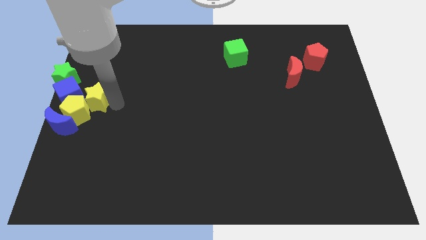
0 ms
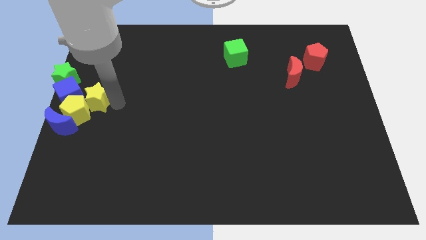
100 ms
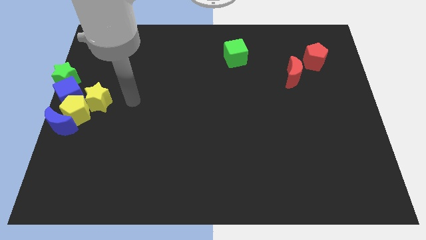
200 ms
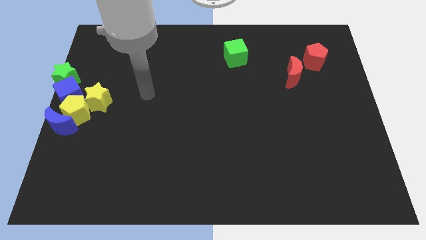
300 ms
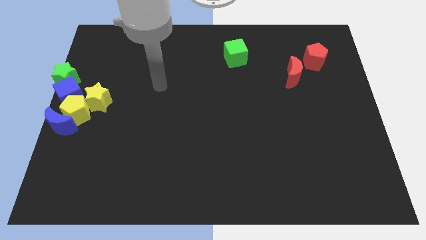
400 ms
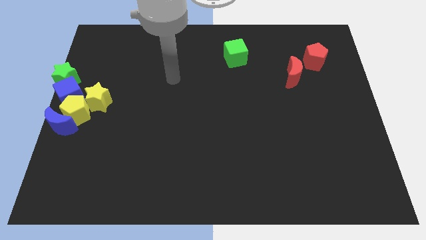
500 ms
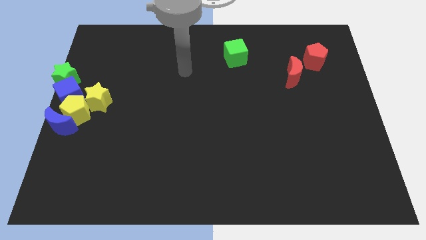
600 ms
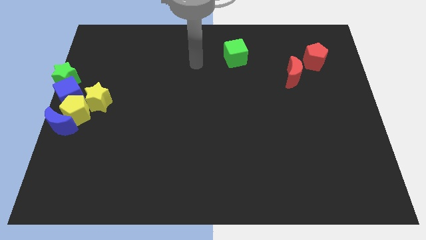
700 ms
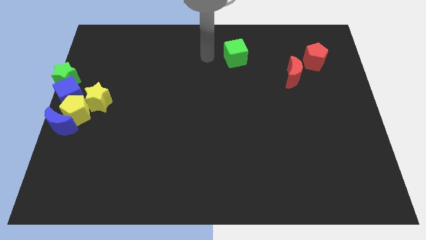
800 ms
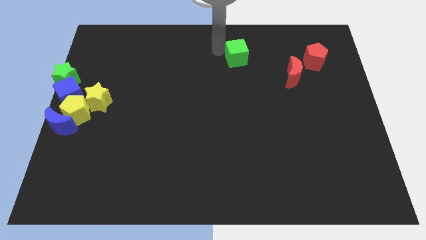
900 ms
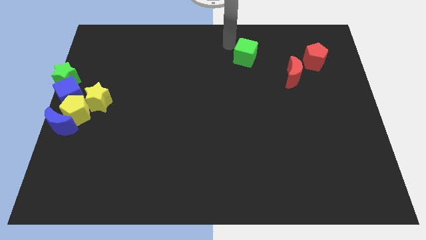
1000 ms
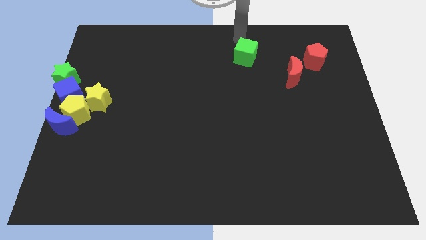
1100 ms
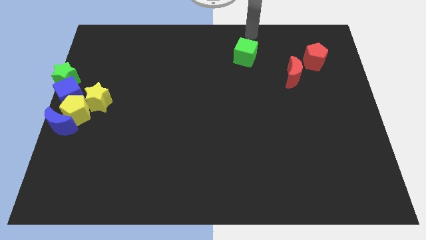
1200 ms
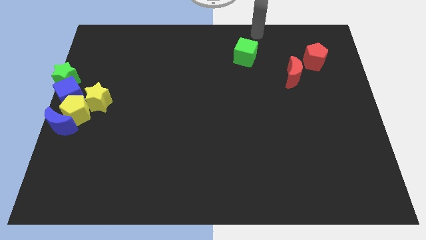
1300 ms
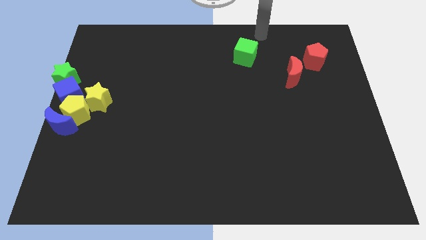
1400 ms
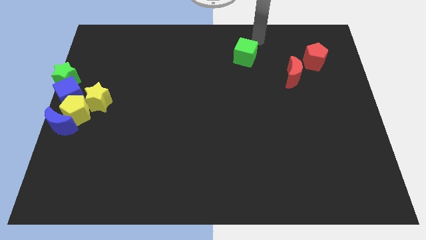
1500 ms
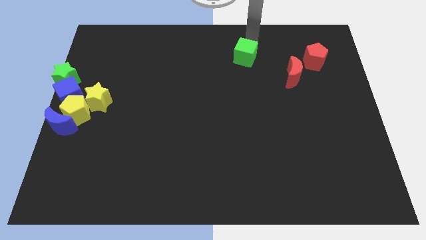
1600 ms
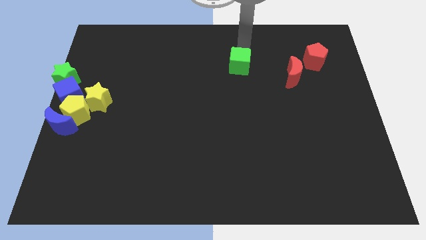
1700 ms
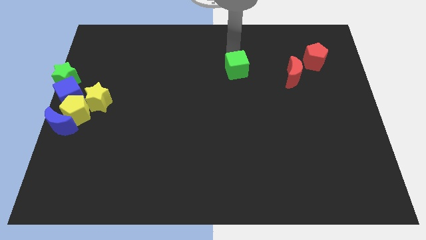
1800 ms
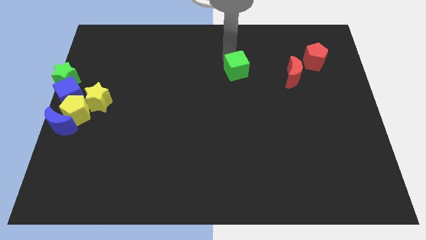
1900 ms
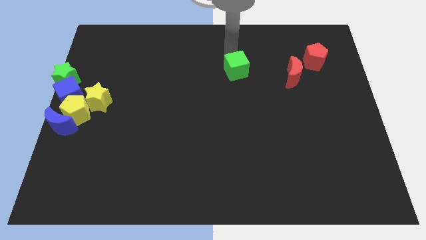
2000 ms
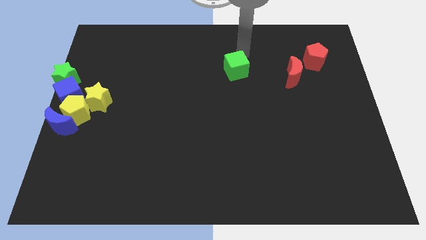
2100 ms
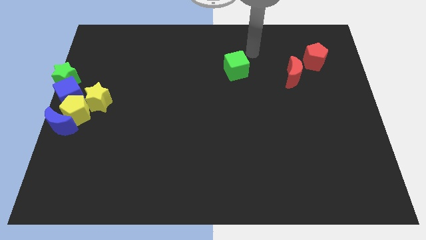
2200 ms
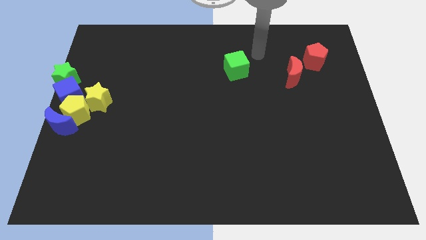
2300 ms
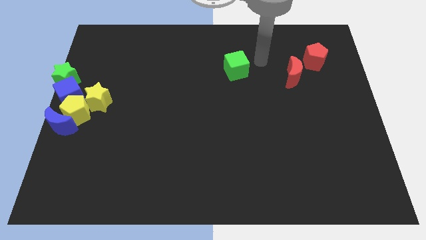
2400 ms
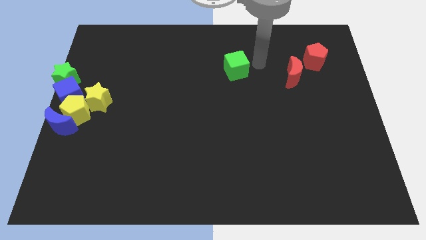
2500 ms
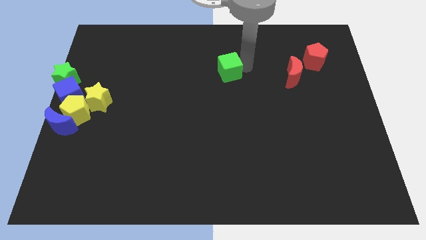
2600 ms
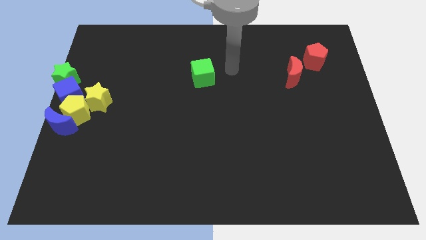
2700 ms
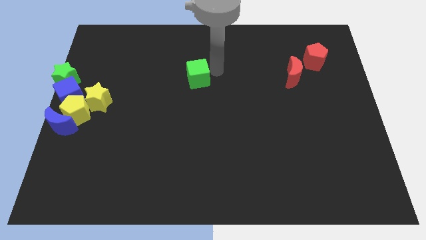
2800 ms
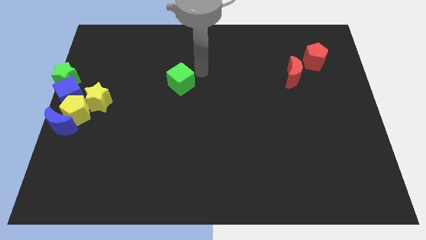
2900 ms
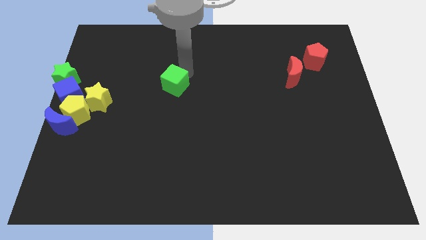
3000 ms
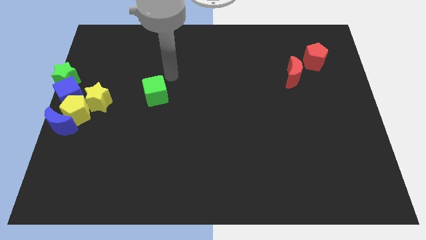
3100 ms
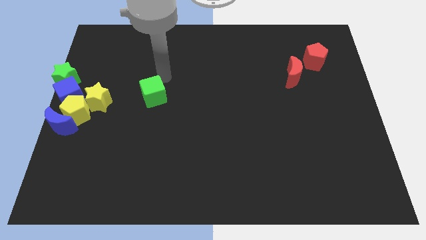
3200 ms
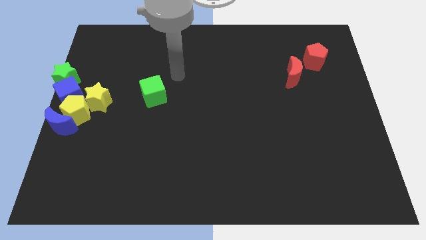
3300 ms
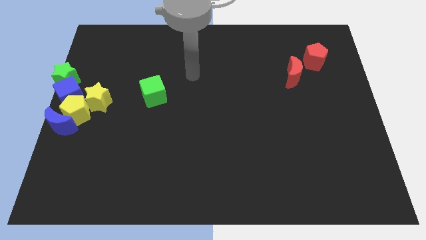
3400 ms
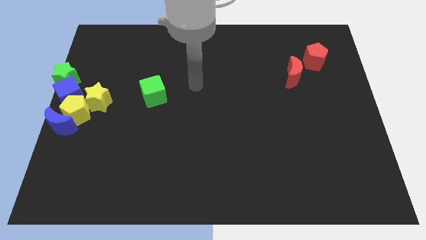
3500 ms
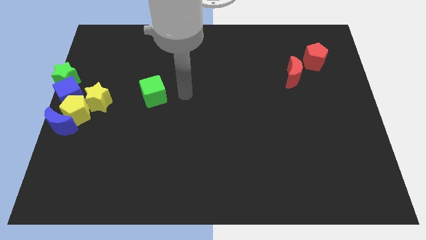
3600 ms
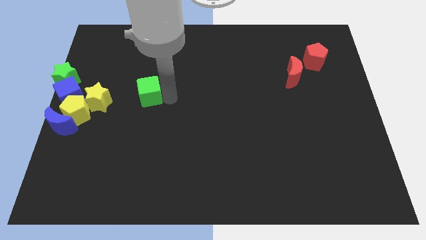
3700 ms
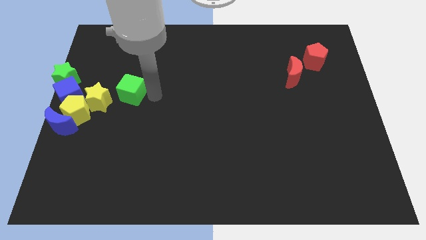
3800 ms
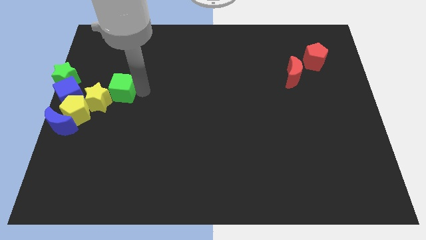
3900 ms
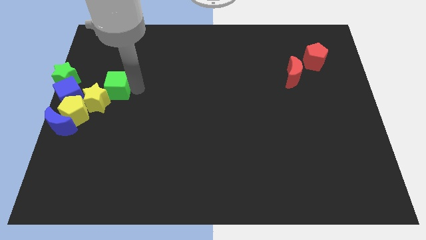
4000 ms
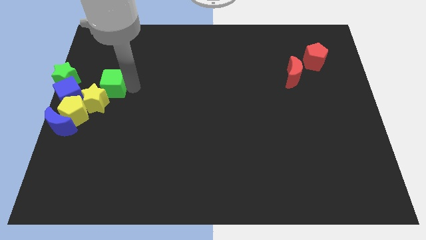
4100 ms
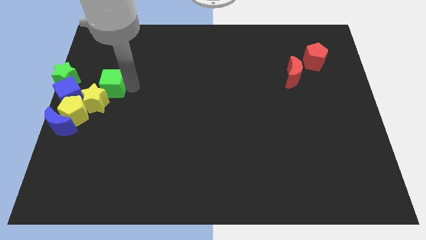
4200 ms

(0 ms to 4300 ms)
move the green cube above yellow star

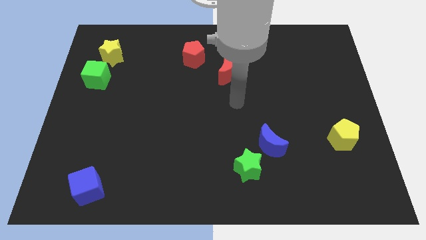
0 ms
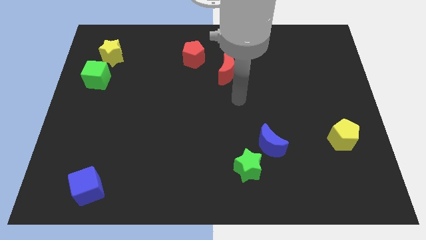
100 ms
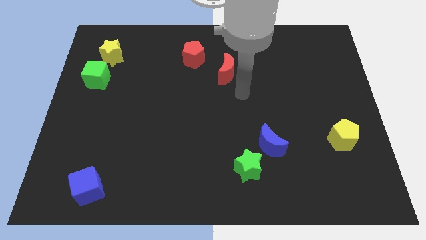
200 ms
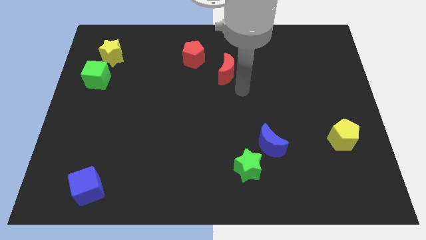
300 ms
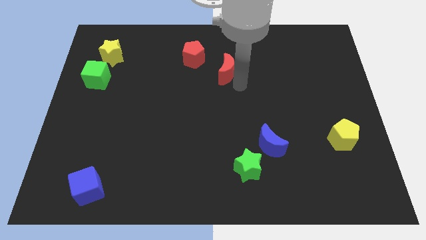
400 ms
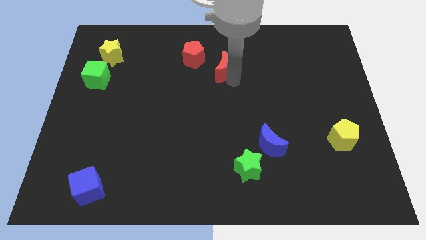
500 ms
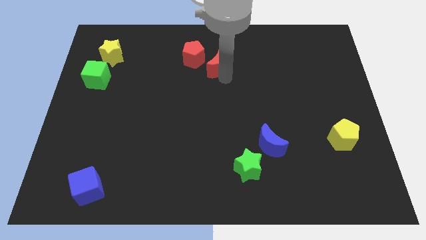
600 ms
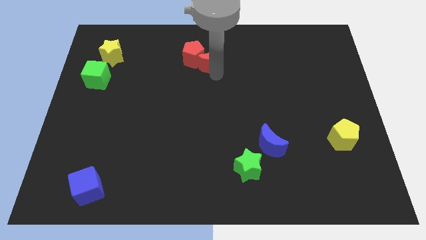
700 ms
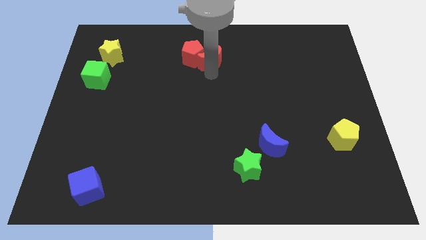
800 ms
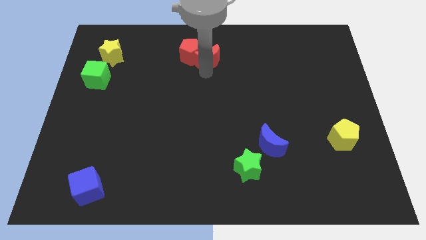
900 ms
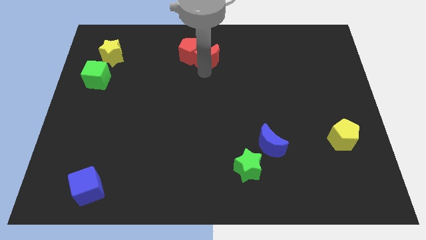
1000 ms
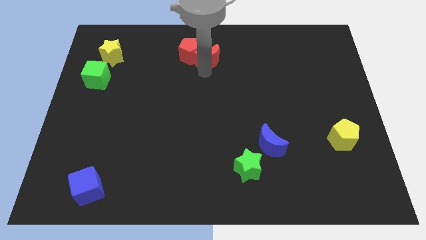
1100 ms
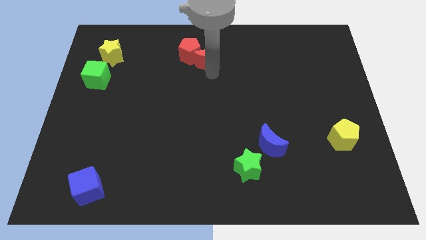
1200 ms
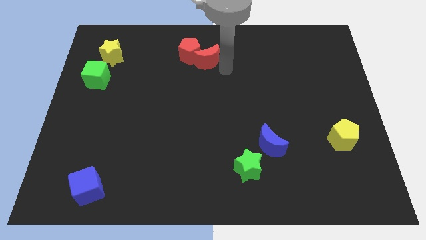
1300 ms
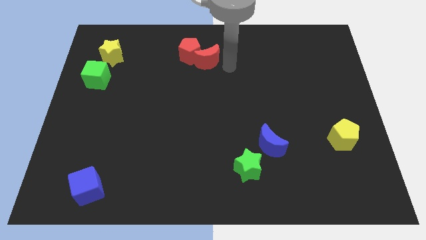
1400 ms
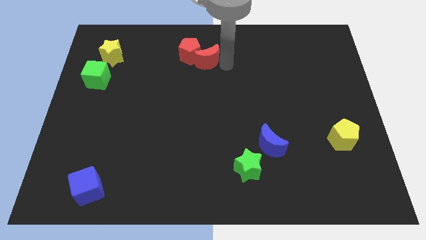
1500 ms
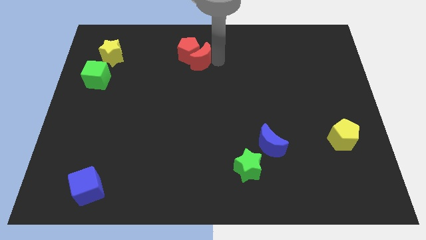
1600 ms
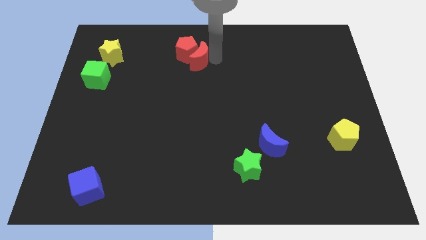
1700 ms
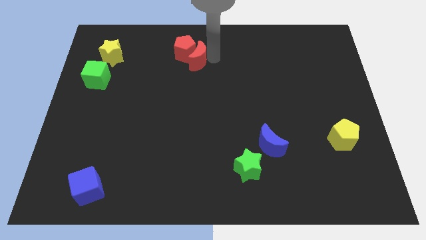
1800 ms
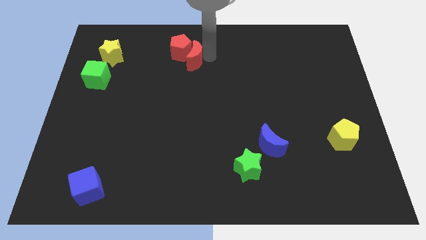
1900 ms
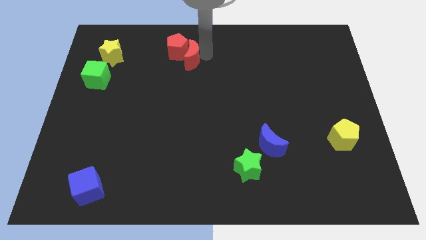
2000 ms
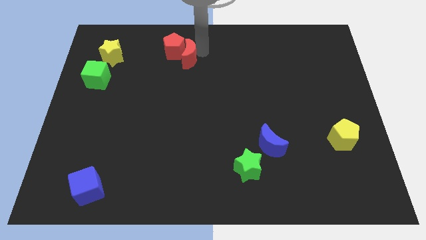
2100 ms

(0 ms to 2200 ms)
push the red crescent into the red pentagon

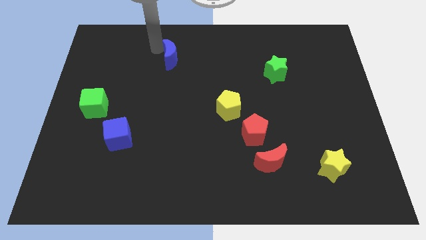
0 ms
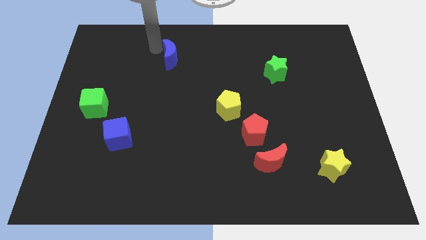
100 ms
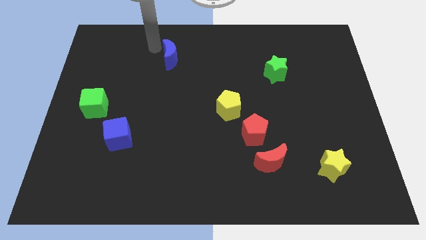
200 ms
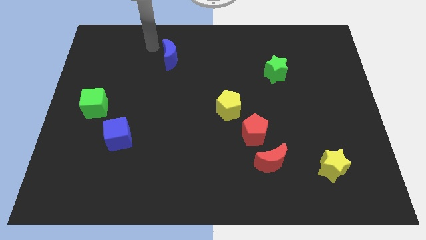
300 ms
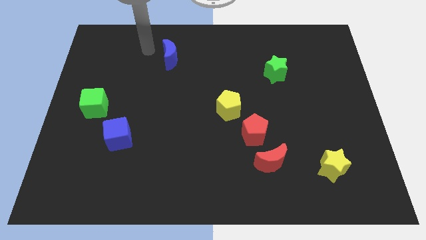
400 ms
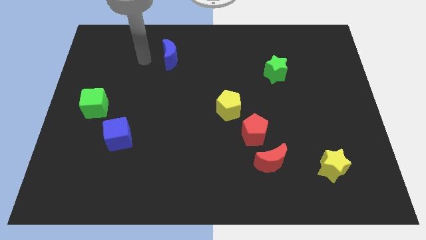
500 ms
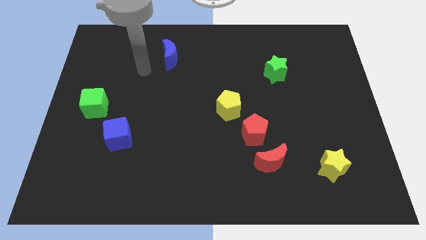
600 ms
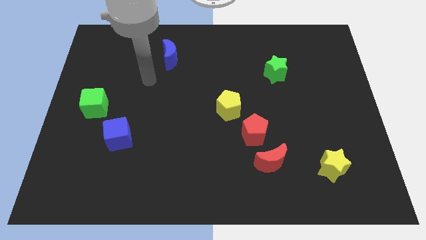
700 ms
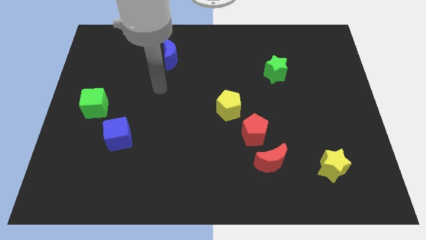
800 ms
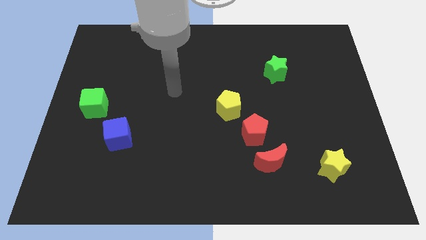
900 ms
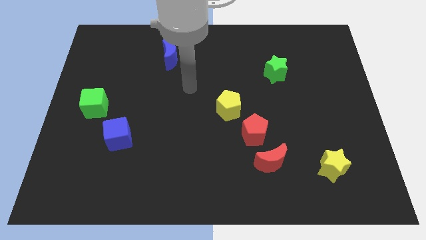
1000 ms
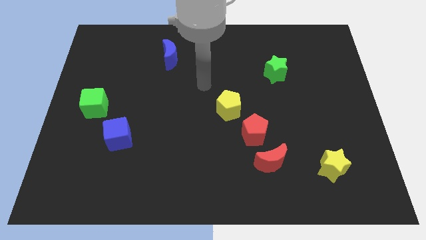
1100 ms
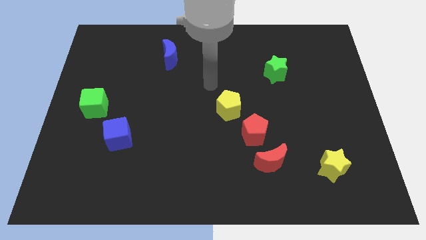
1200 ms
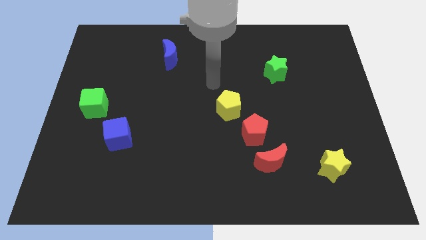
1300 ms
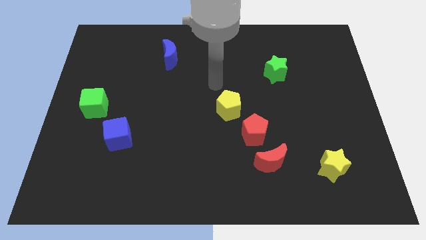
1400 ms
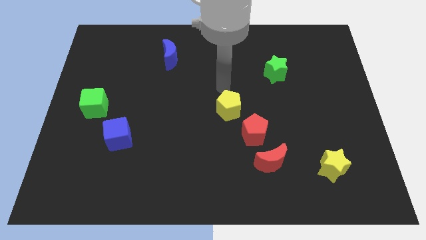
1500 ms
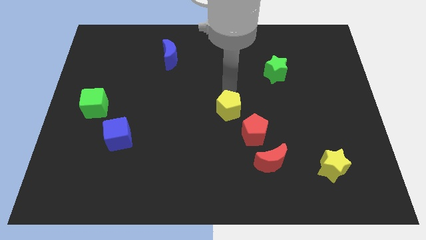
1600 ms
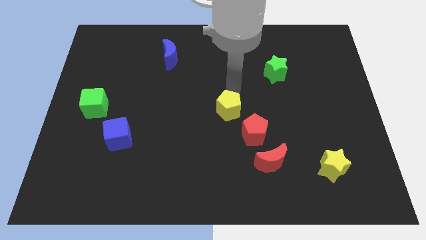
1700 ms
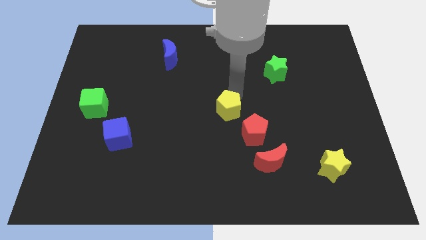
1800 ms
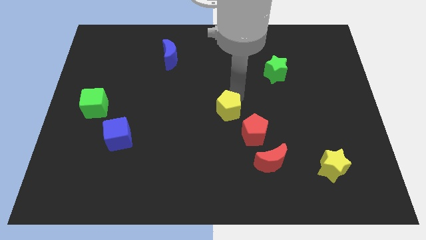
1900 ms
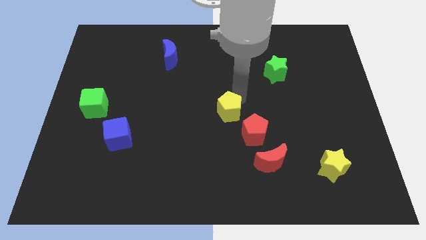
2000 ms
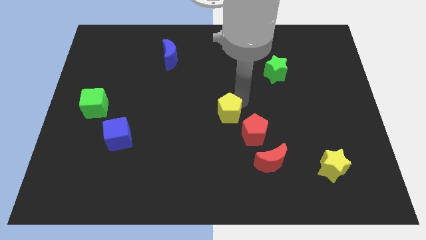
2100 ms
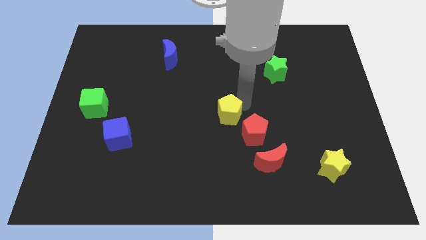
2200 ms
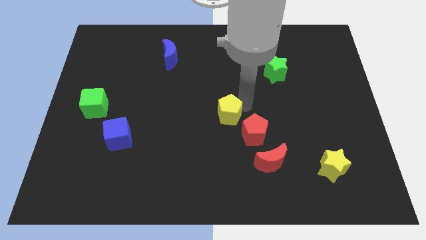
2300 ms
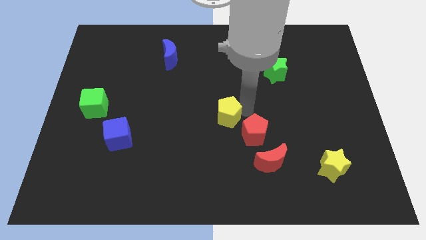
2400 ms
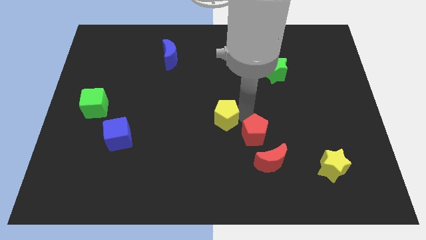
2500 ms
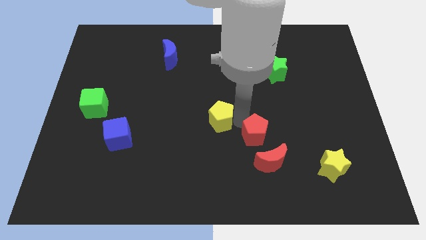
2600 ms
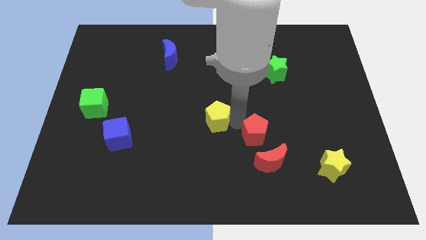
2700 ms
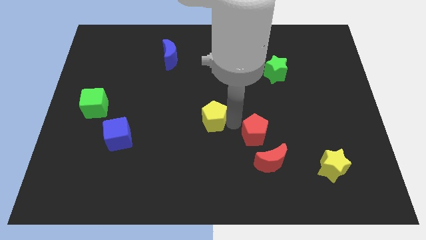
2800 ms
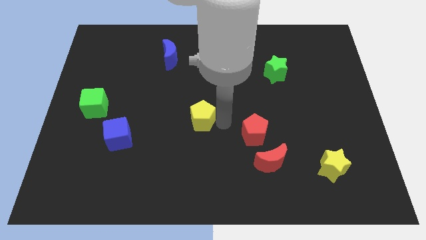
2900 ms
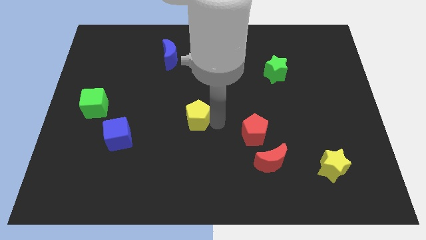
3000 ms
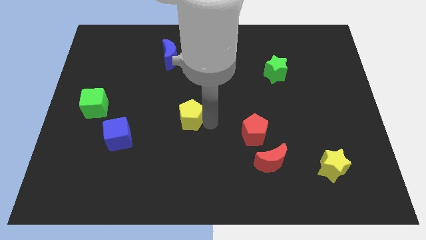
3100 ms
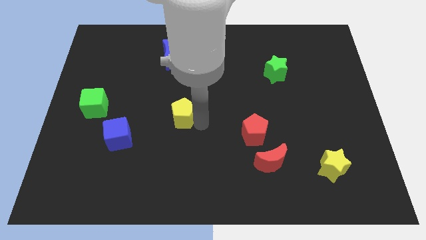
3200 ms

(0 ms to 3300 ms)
push yellow pentagon to the center left
